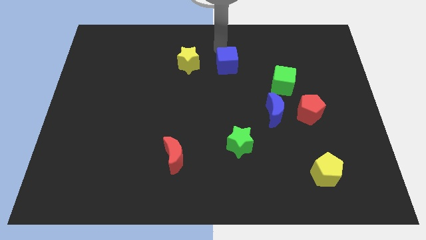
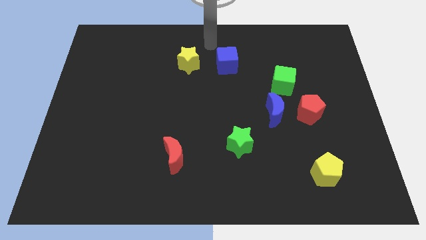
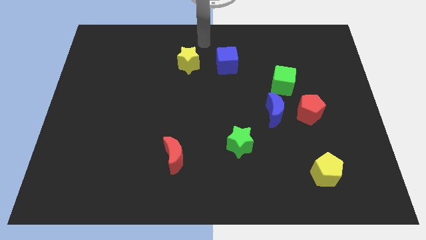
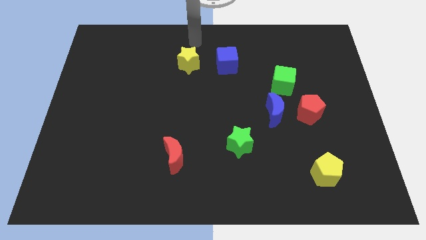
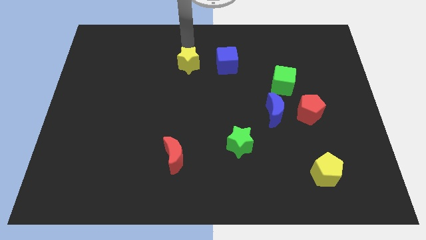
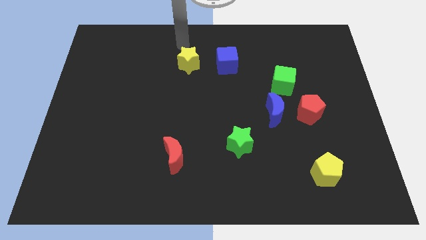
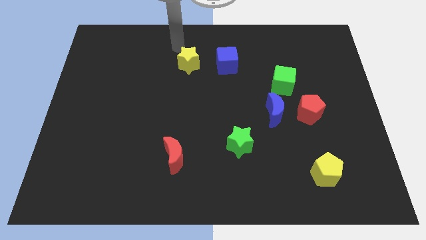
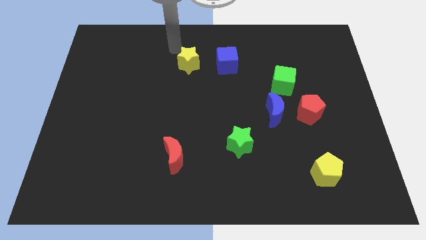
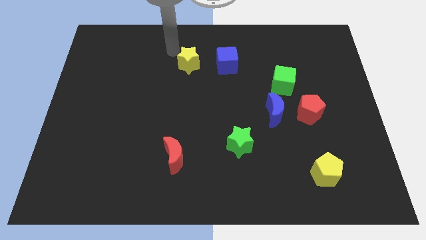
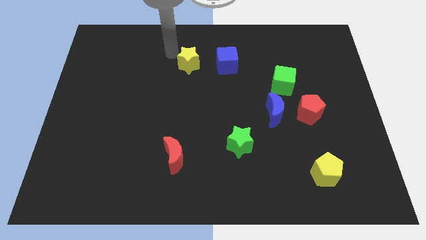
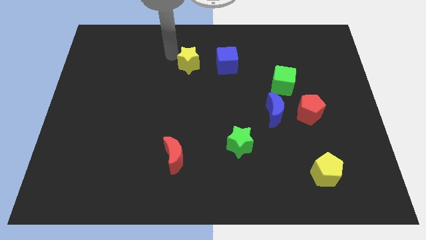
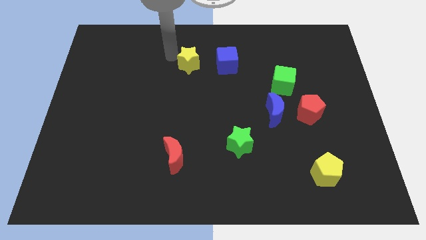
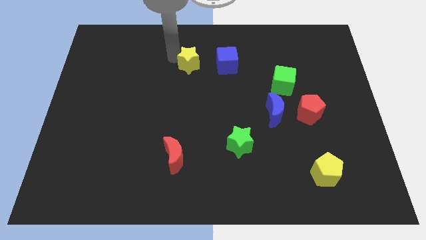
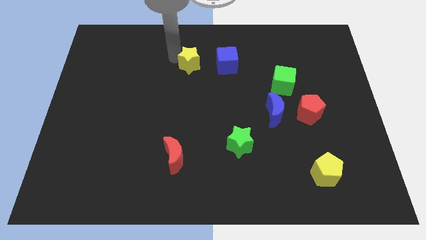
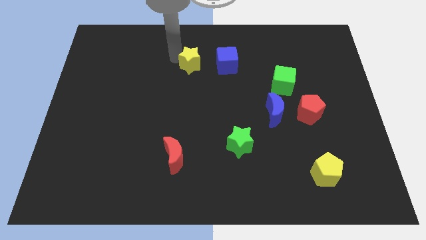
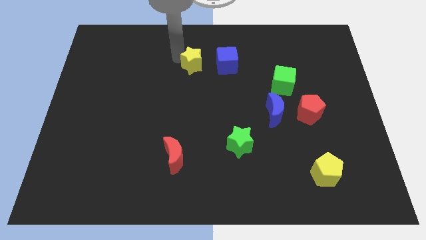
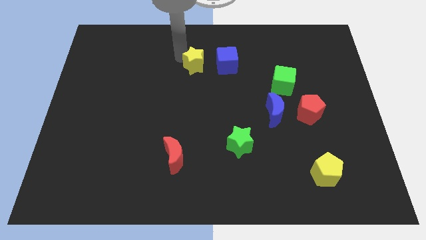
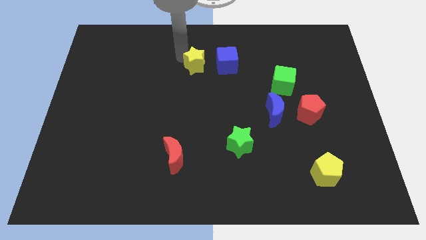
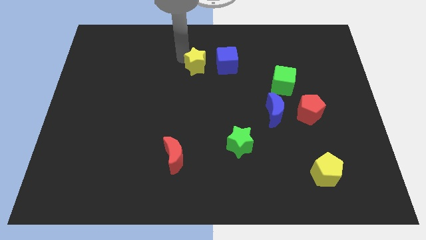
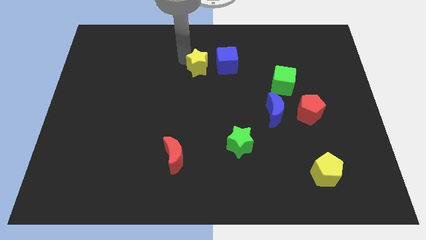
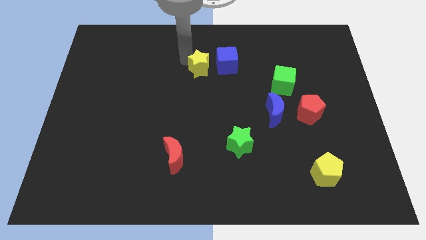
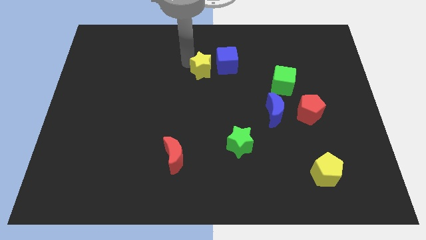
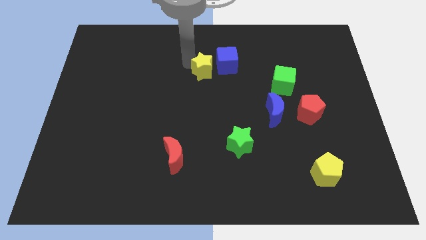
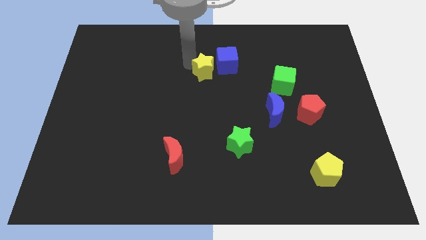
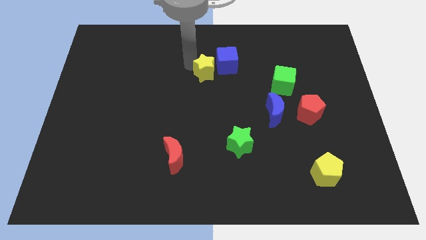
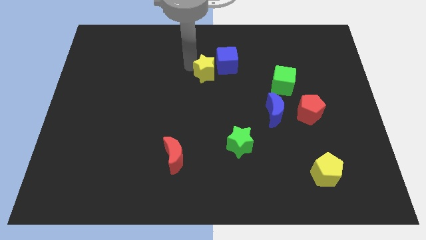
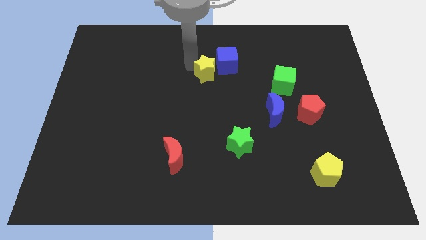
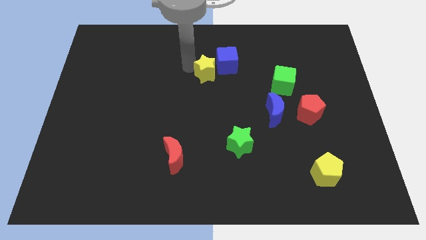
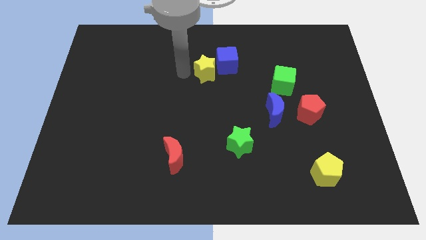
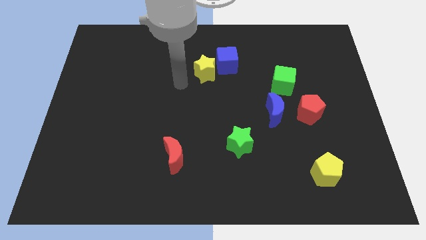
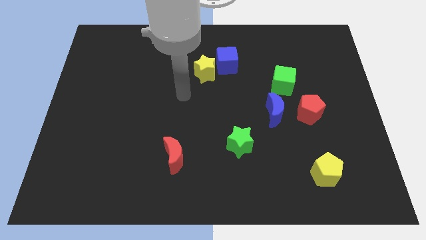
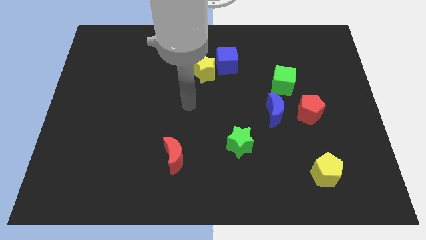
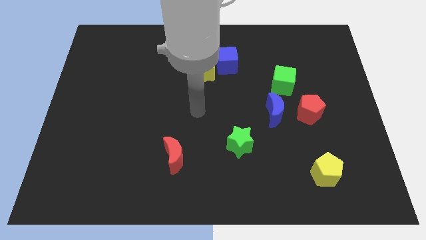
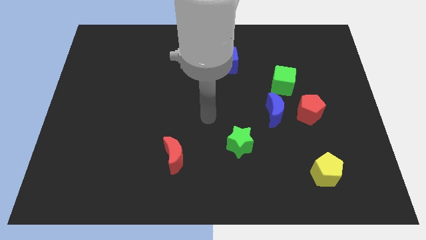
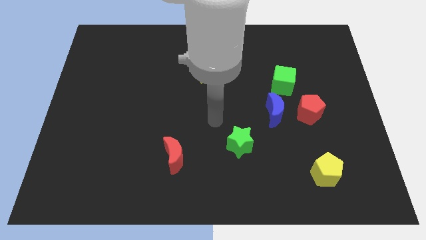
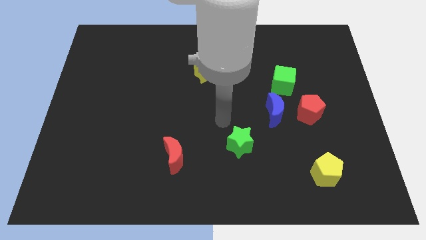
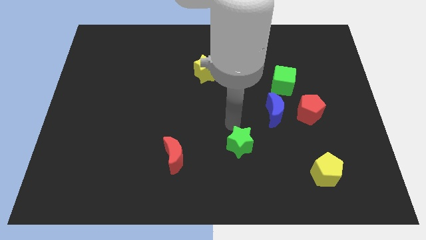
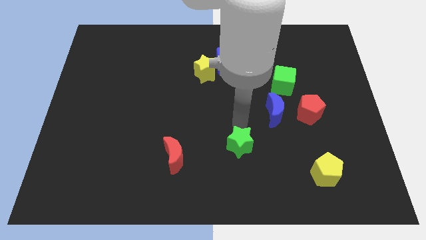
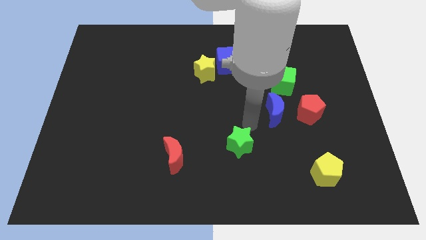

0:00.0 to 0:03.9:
push the yellow star to the left of the blue cube

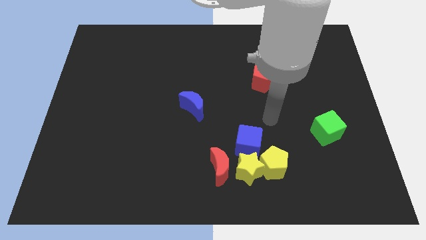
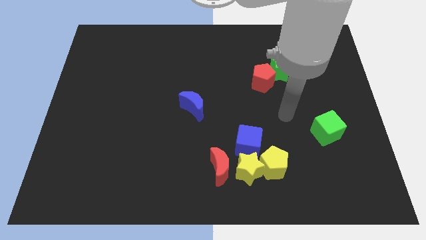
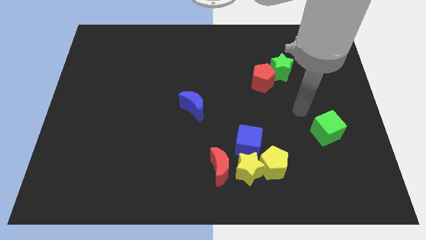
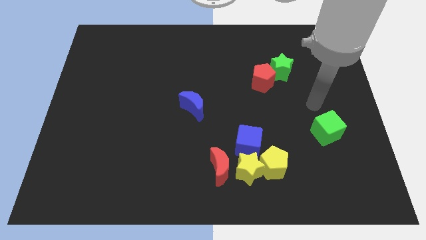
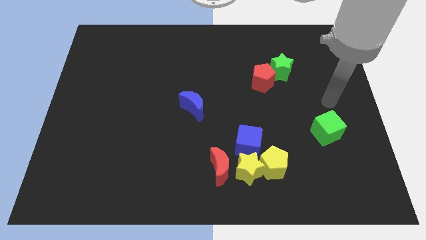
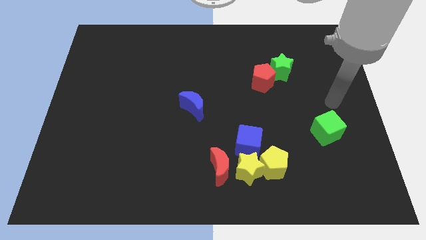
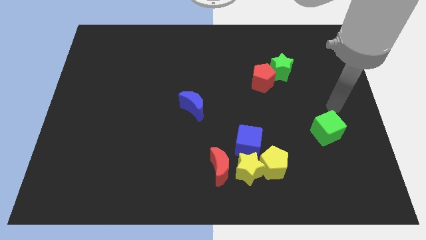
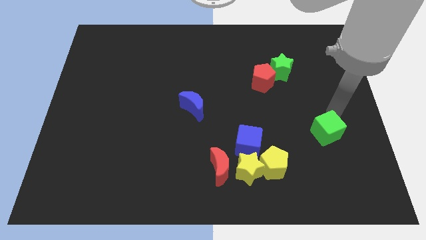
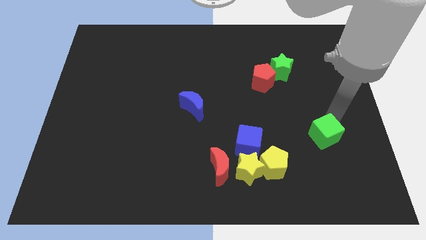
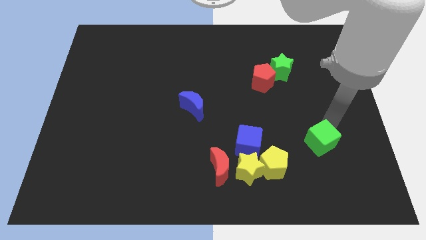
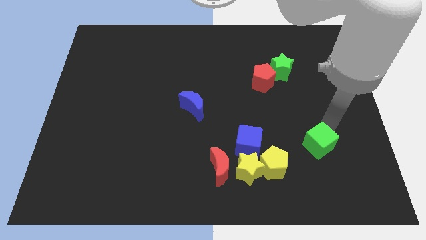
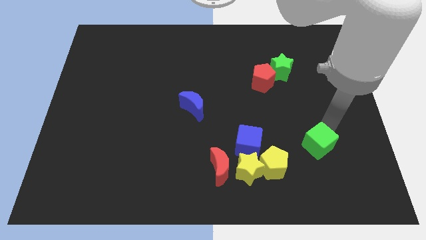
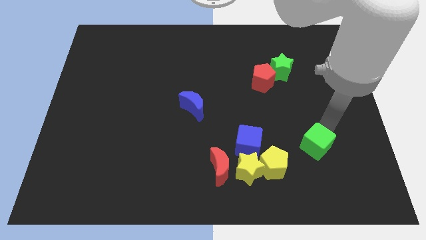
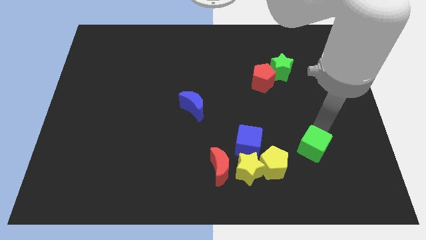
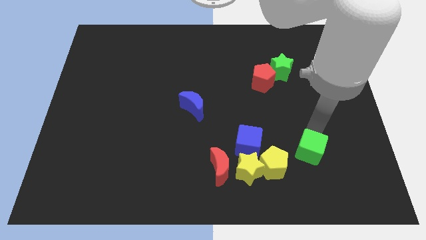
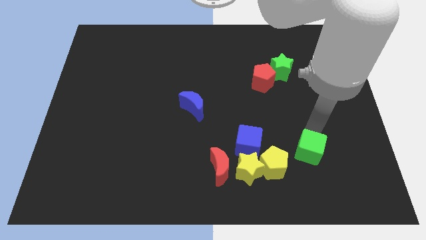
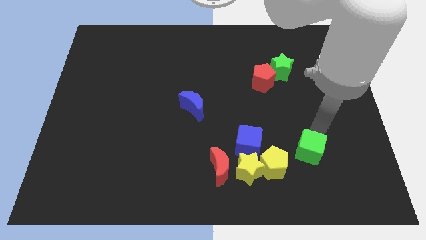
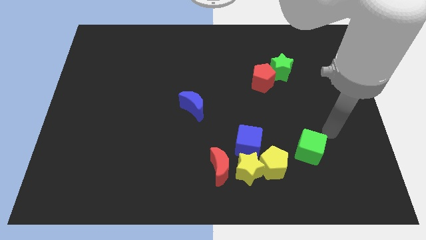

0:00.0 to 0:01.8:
push the green cube towards the yellow pentagon

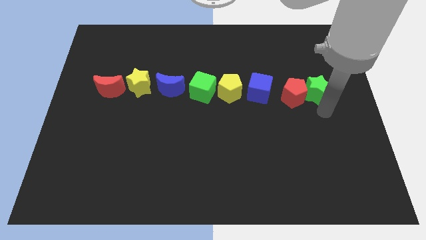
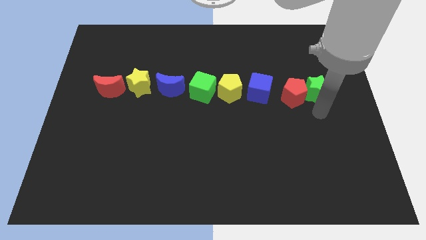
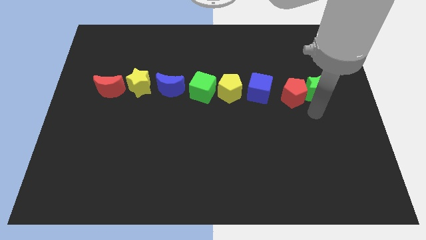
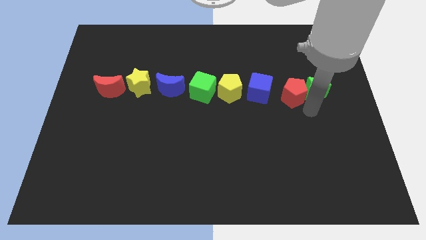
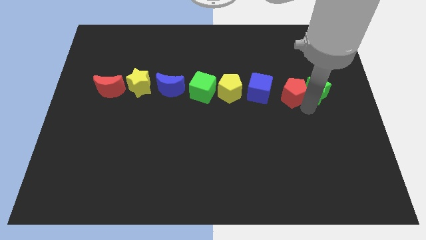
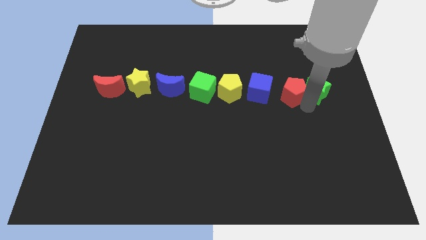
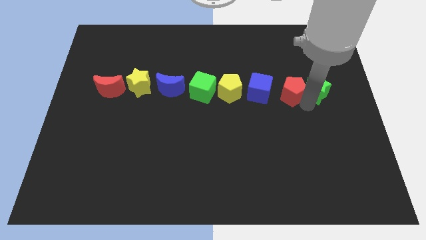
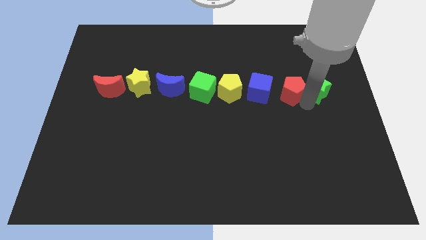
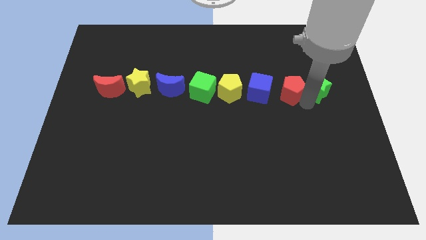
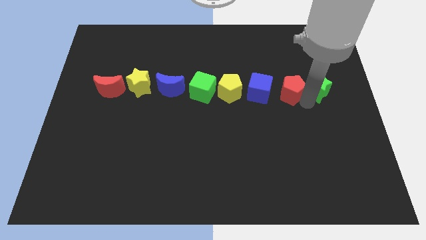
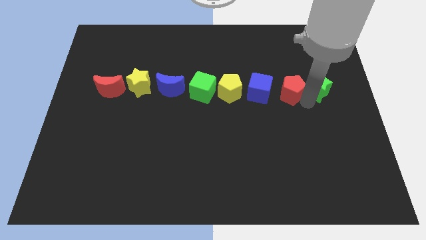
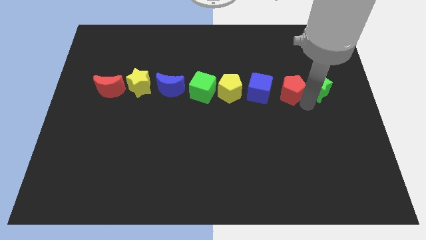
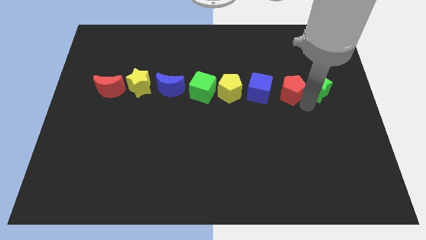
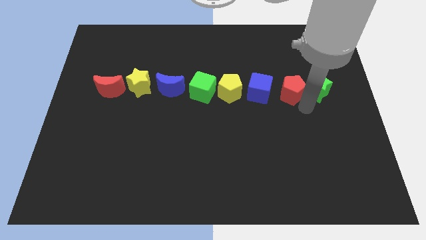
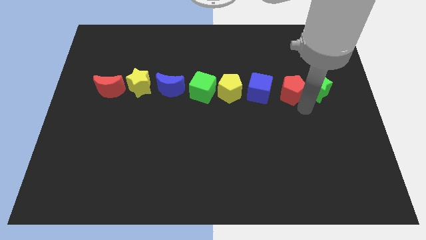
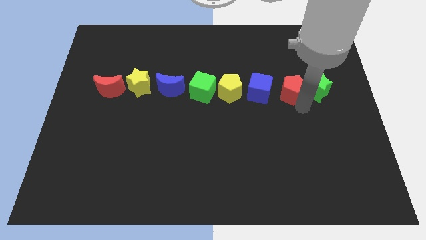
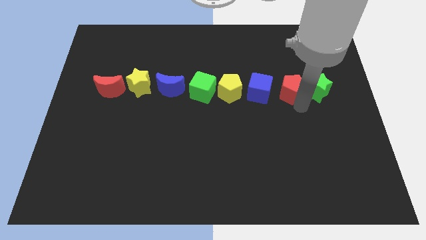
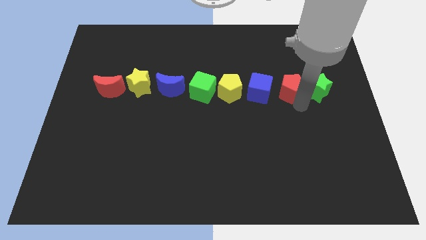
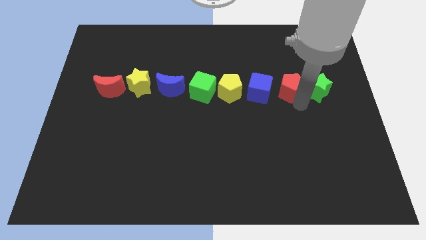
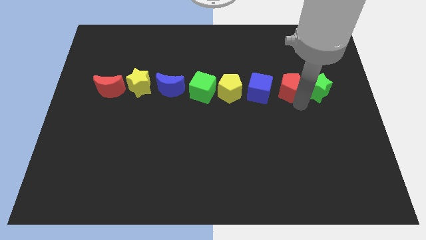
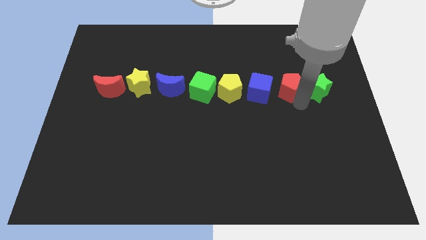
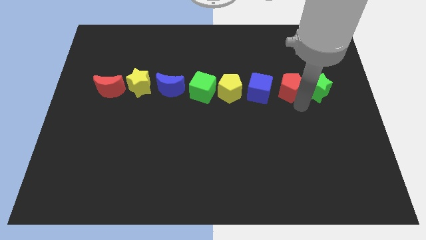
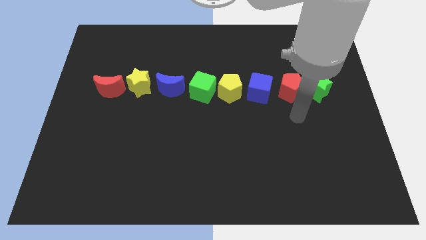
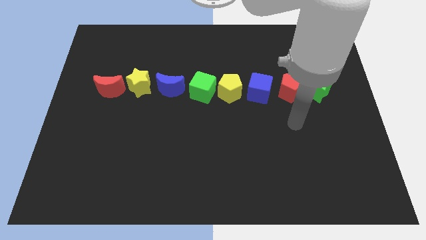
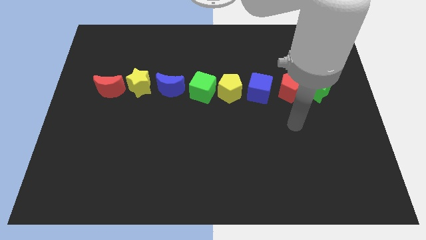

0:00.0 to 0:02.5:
place red pentagon in between green star and blue cube

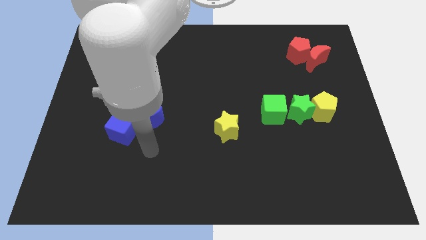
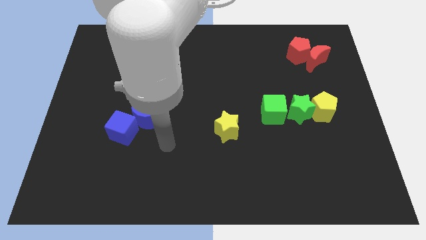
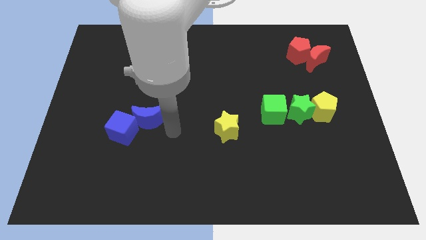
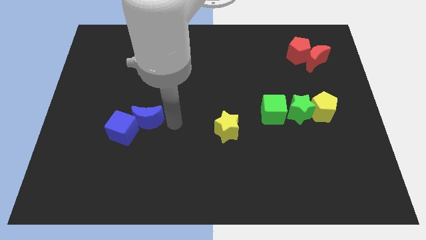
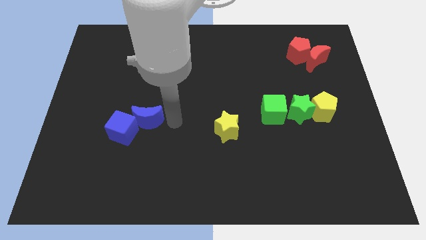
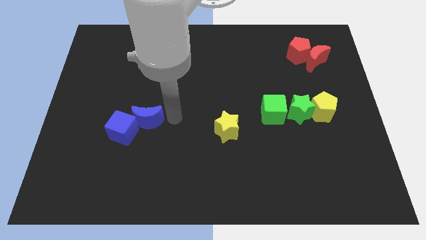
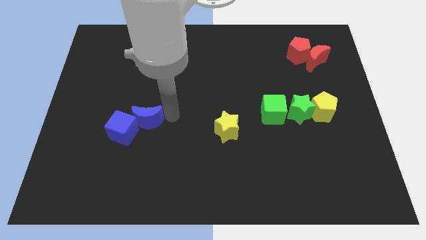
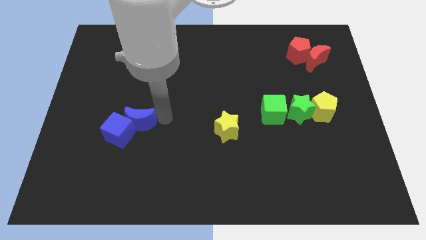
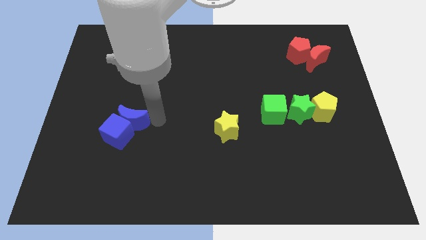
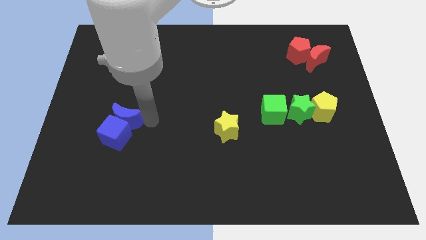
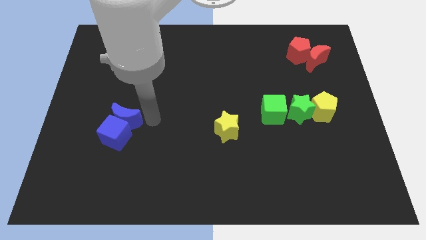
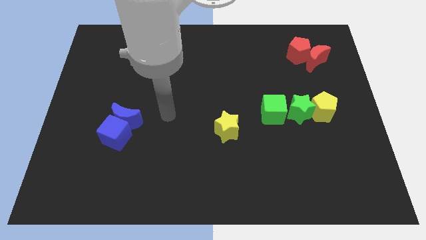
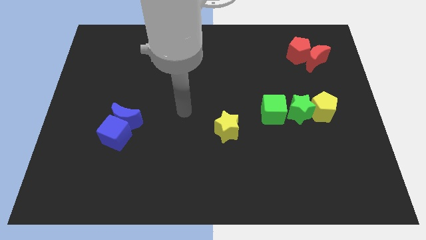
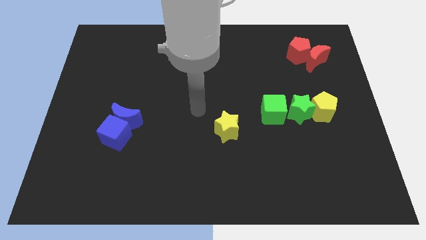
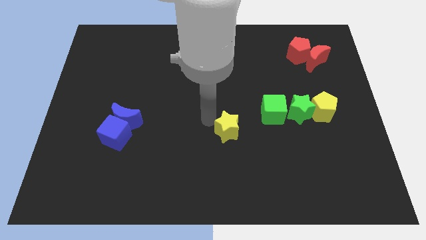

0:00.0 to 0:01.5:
slide the blue moon slightly to the left
